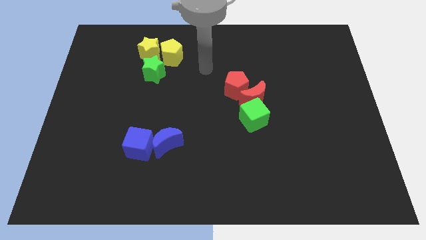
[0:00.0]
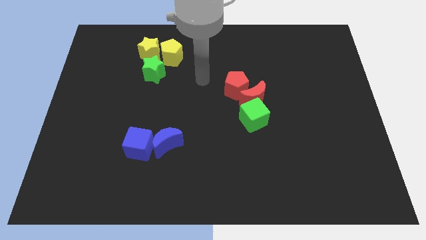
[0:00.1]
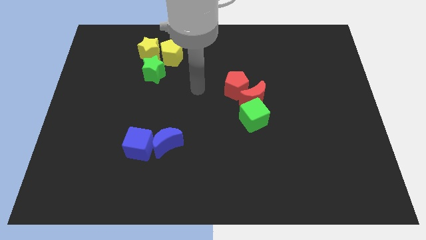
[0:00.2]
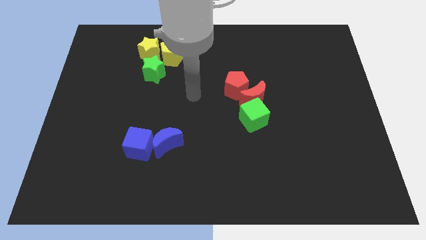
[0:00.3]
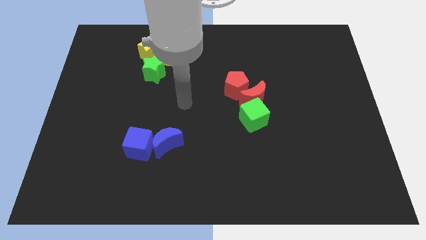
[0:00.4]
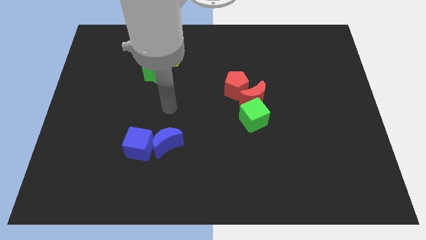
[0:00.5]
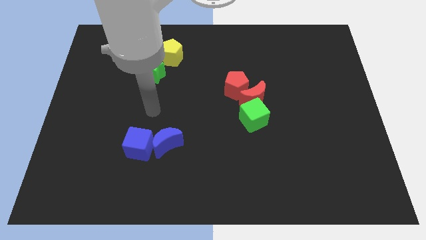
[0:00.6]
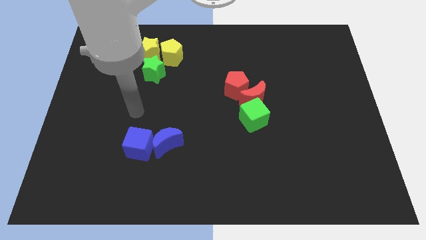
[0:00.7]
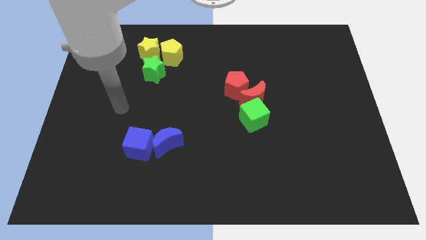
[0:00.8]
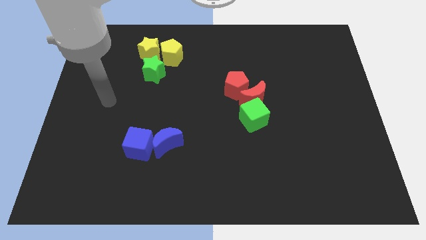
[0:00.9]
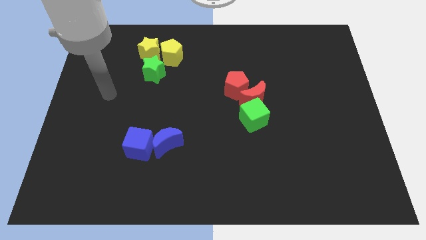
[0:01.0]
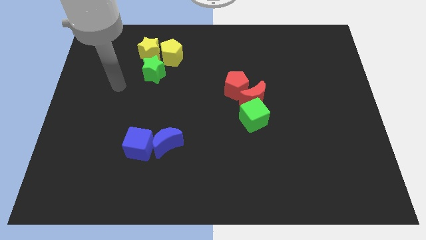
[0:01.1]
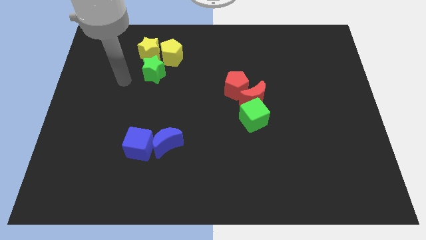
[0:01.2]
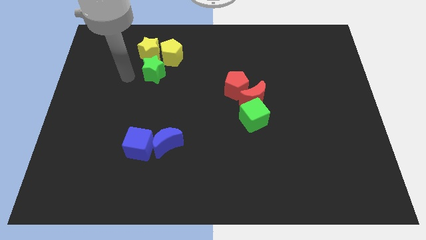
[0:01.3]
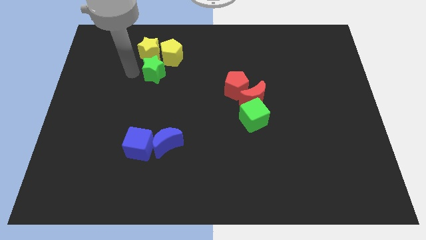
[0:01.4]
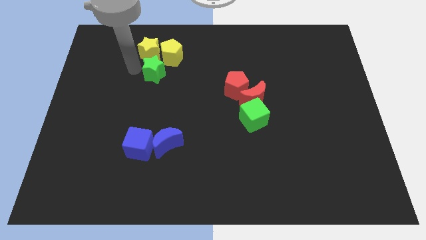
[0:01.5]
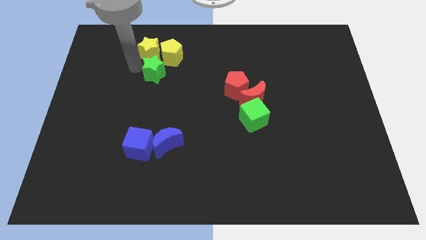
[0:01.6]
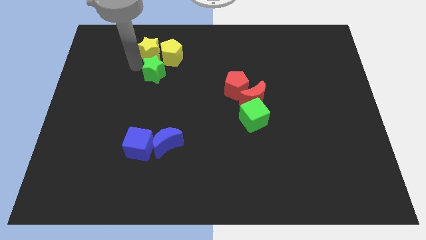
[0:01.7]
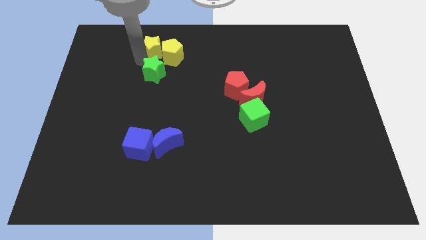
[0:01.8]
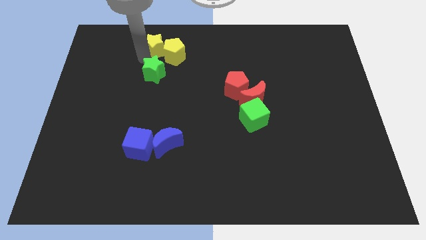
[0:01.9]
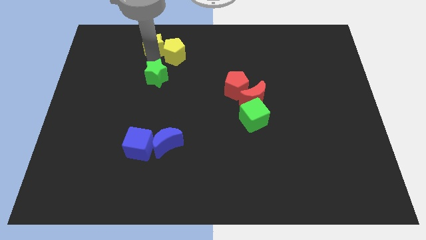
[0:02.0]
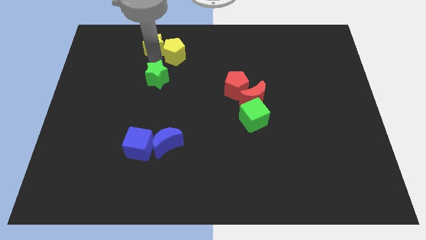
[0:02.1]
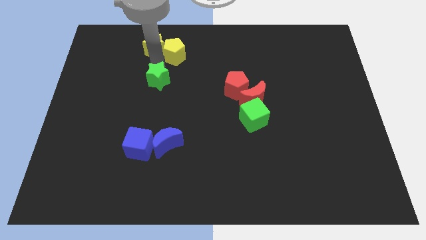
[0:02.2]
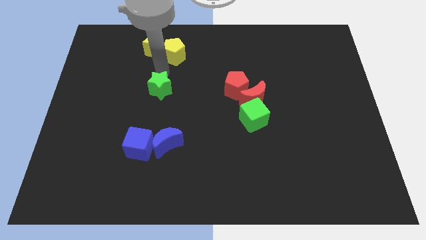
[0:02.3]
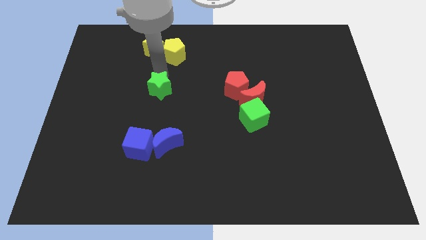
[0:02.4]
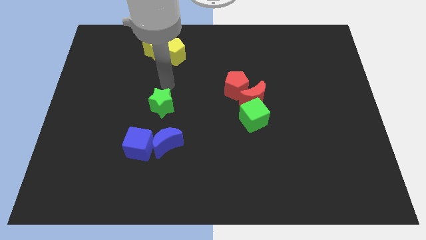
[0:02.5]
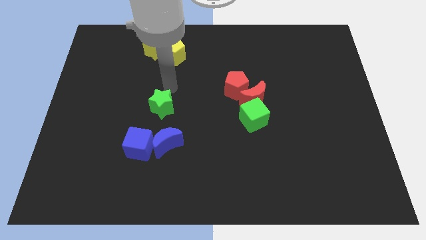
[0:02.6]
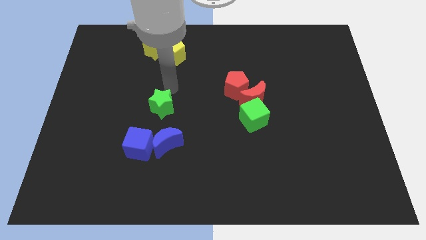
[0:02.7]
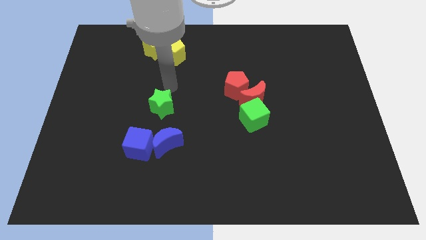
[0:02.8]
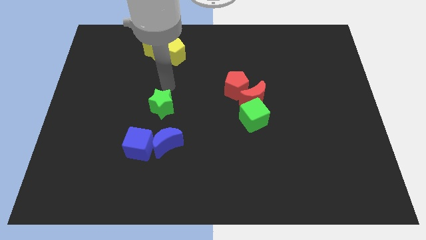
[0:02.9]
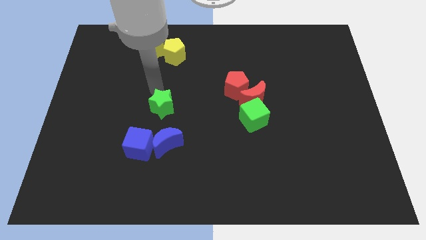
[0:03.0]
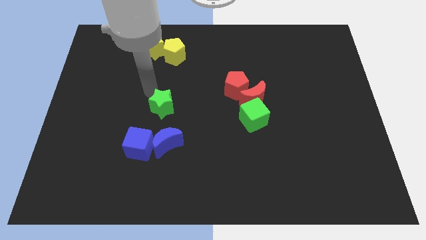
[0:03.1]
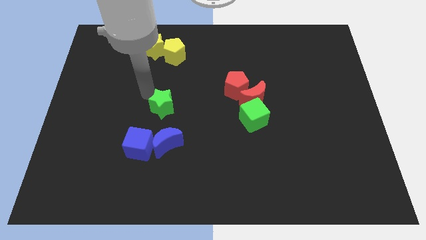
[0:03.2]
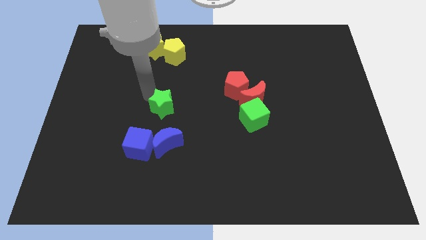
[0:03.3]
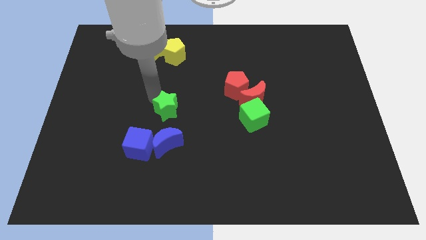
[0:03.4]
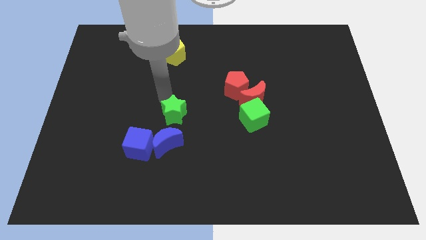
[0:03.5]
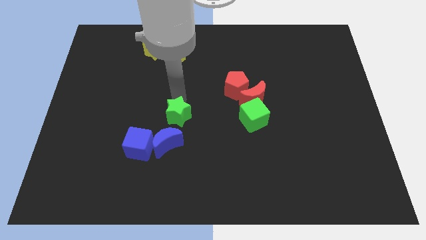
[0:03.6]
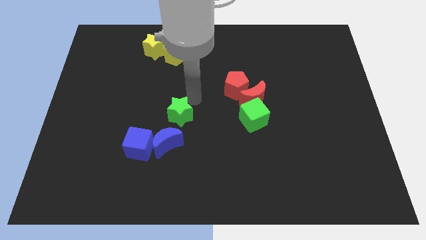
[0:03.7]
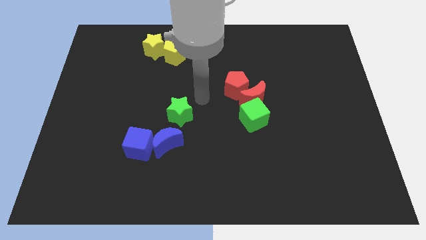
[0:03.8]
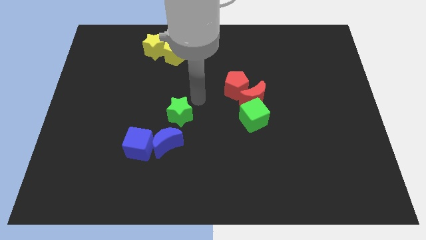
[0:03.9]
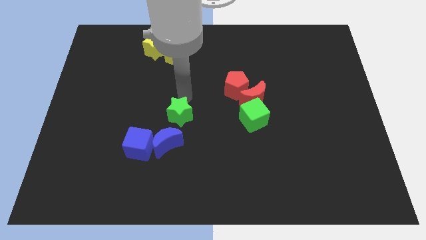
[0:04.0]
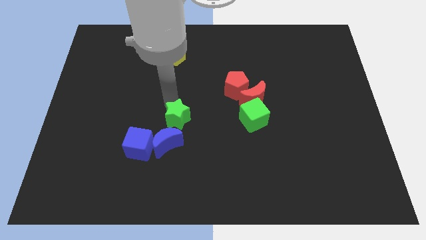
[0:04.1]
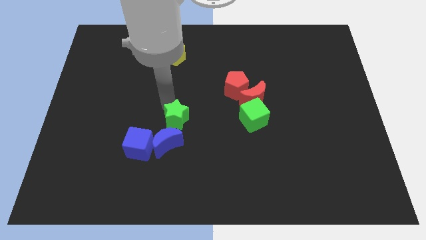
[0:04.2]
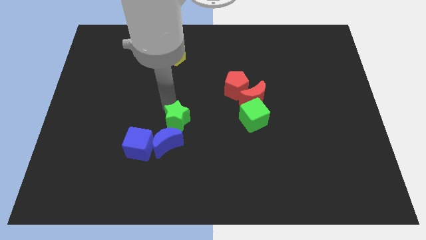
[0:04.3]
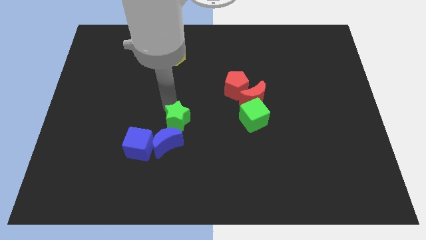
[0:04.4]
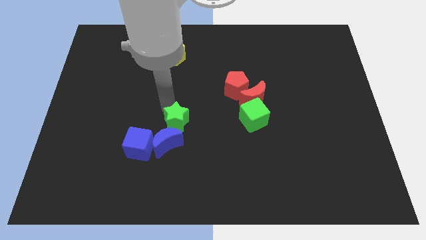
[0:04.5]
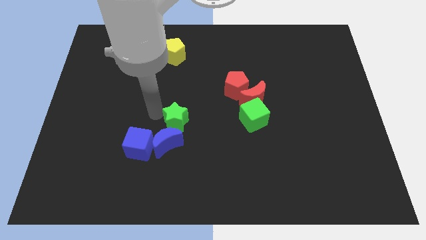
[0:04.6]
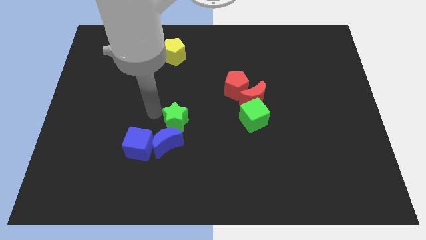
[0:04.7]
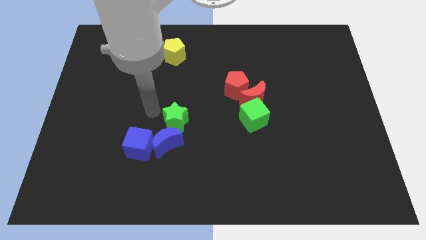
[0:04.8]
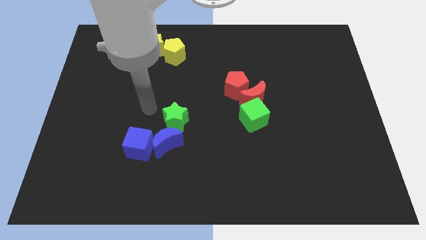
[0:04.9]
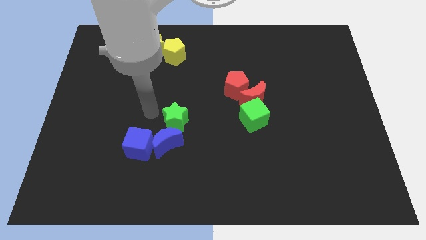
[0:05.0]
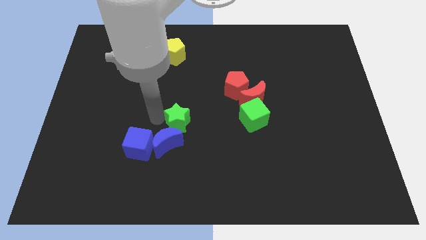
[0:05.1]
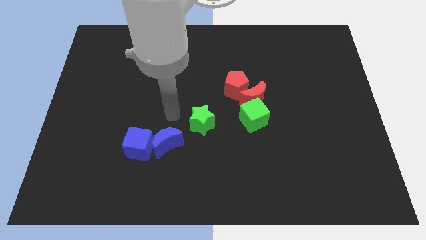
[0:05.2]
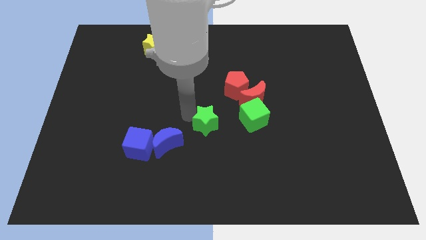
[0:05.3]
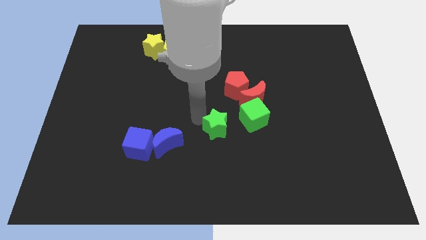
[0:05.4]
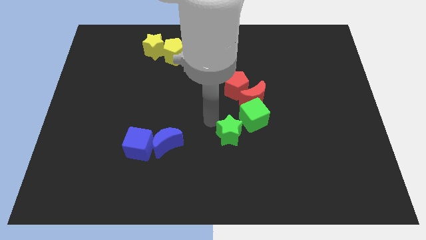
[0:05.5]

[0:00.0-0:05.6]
place the green star in between green cube and blue crescent

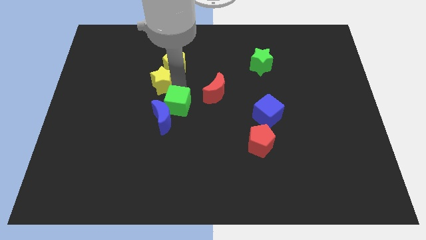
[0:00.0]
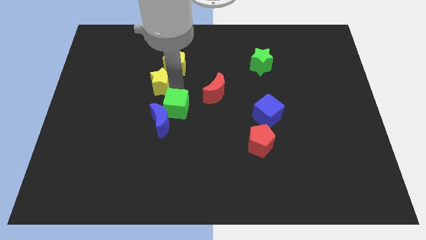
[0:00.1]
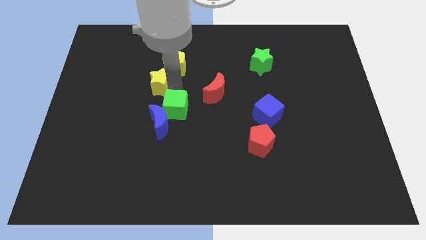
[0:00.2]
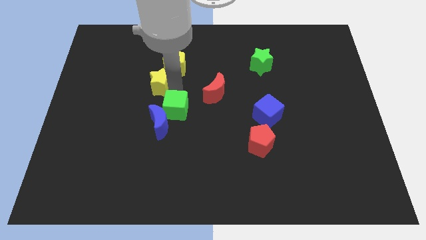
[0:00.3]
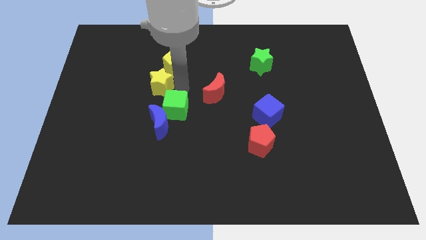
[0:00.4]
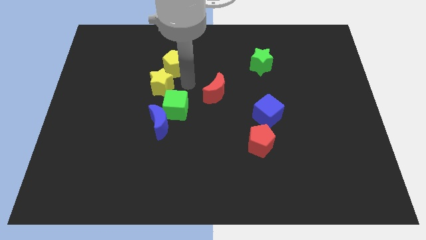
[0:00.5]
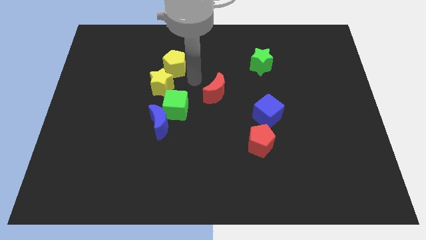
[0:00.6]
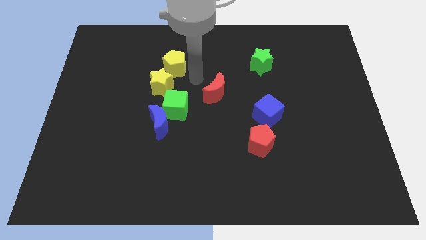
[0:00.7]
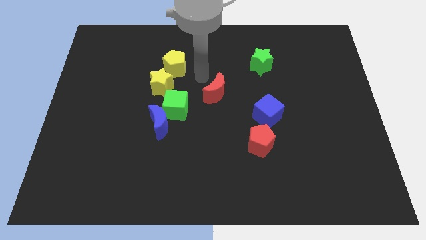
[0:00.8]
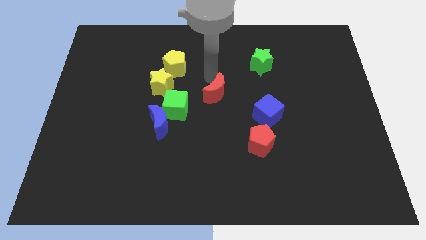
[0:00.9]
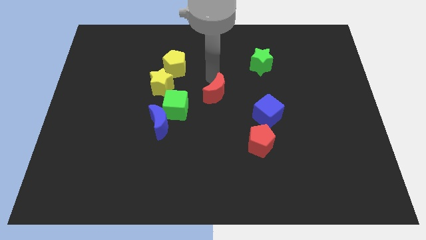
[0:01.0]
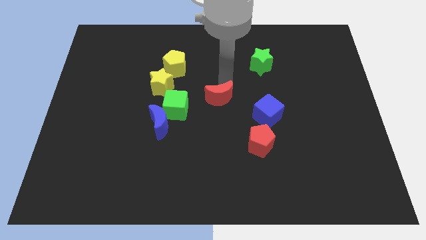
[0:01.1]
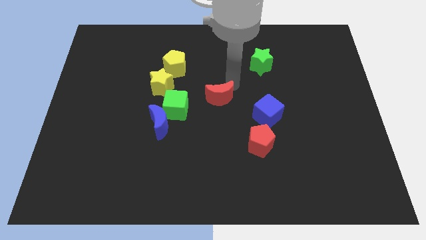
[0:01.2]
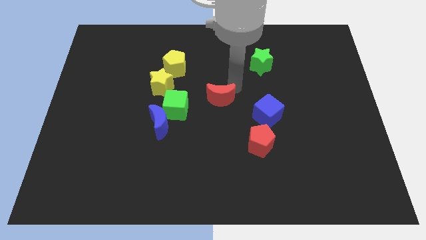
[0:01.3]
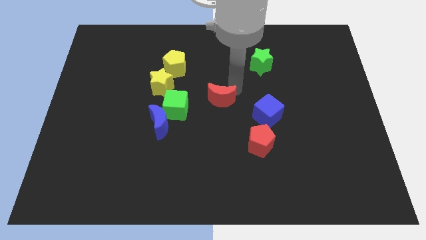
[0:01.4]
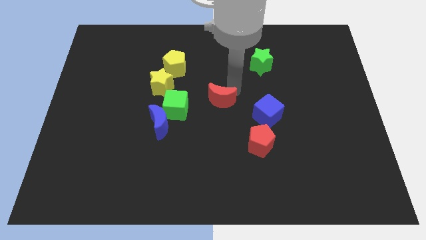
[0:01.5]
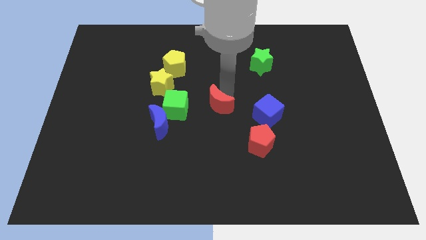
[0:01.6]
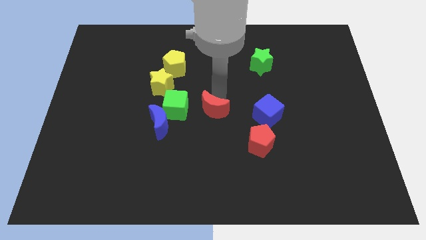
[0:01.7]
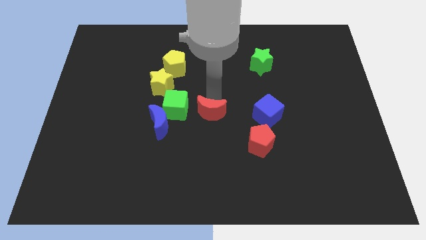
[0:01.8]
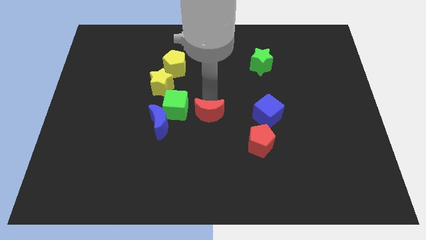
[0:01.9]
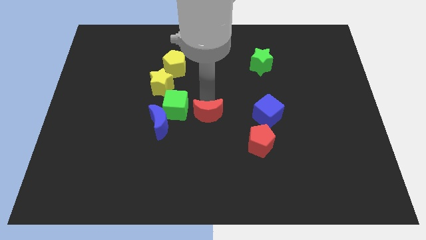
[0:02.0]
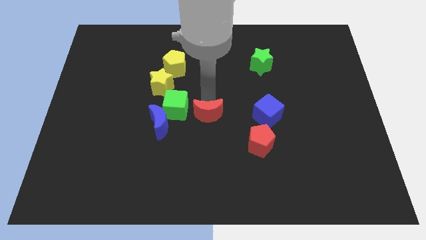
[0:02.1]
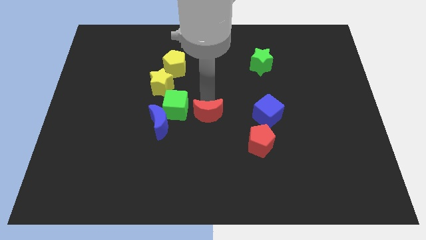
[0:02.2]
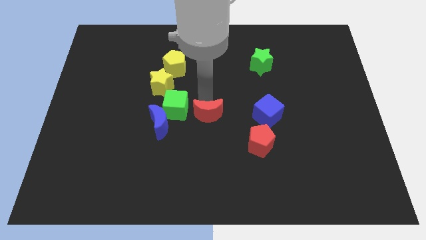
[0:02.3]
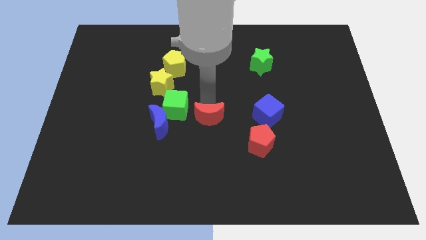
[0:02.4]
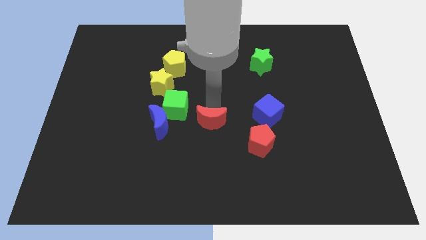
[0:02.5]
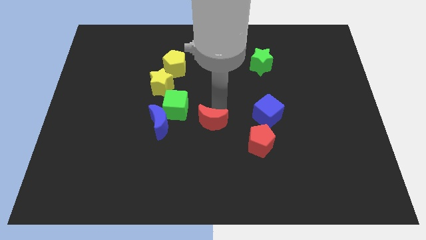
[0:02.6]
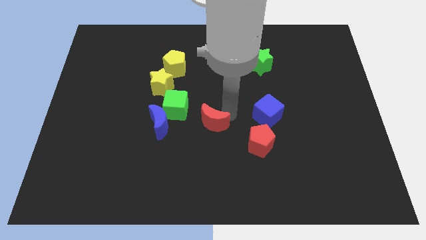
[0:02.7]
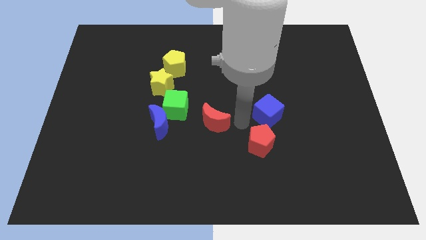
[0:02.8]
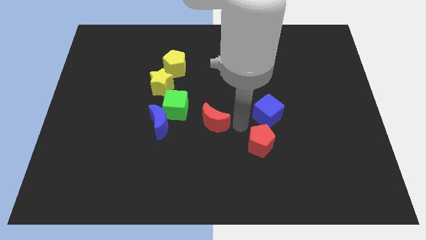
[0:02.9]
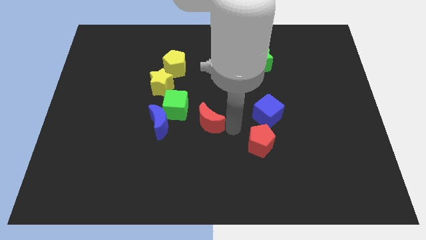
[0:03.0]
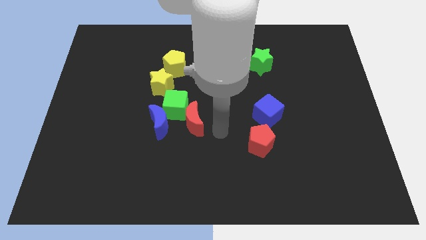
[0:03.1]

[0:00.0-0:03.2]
drag the red crescent to bottom right of green cube

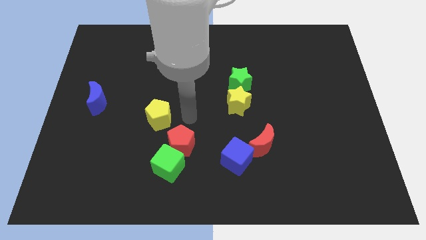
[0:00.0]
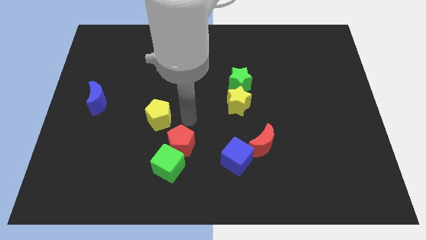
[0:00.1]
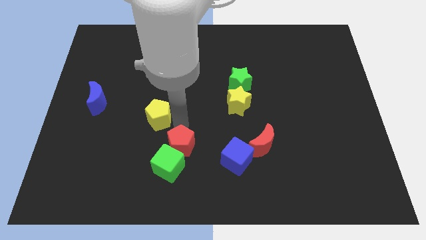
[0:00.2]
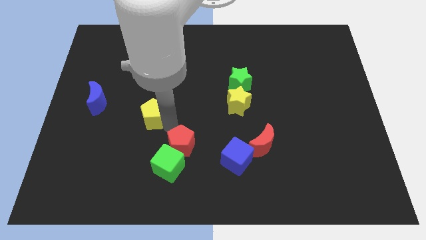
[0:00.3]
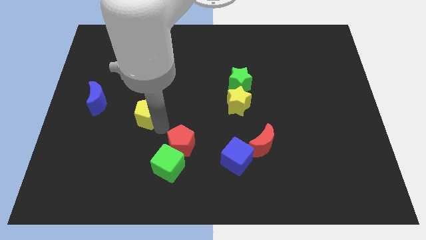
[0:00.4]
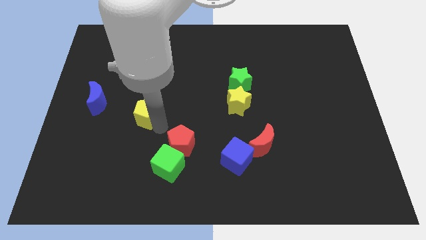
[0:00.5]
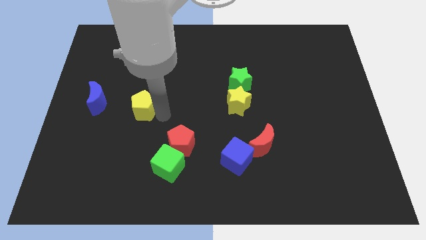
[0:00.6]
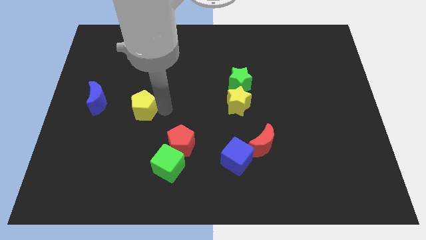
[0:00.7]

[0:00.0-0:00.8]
push the yellow pentagon slightly to the left
